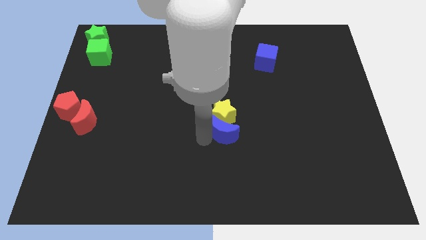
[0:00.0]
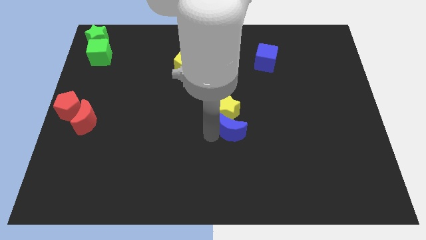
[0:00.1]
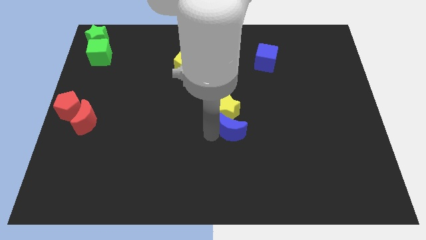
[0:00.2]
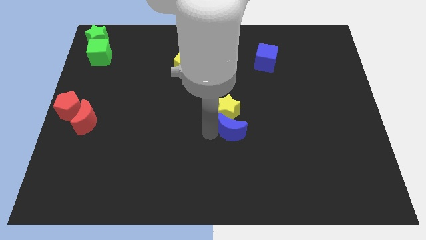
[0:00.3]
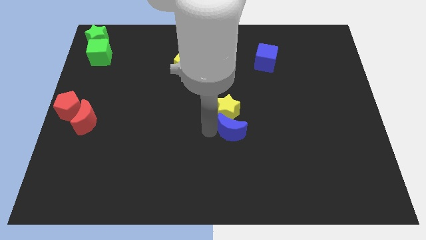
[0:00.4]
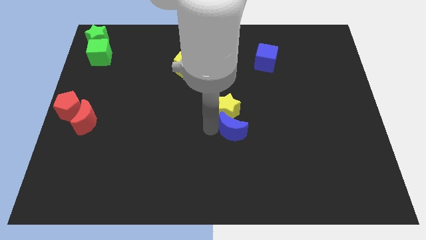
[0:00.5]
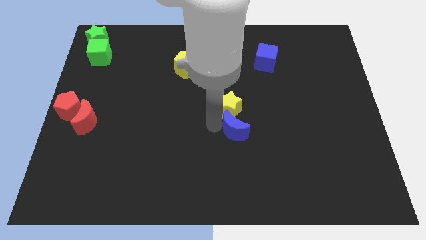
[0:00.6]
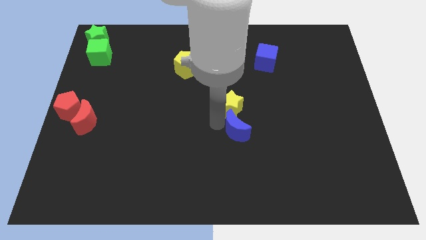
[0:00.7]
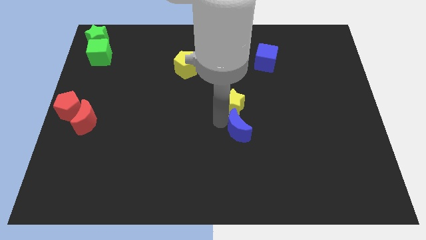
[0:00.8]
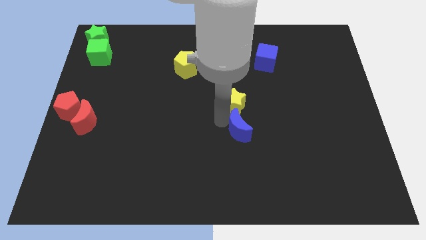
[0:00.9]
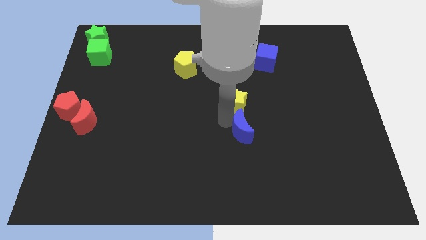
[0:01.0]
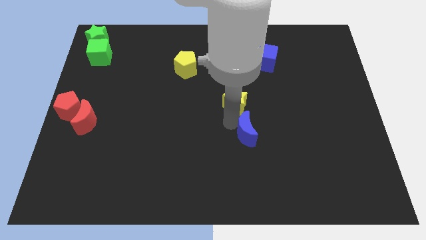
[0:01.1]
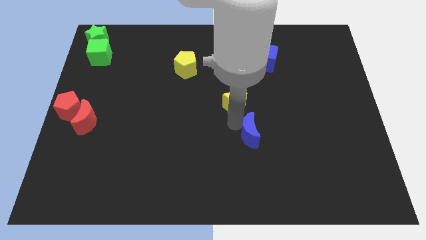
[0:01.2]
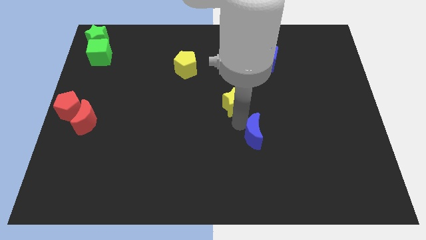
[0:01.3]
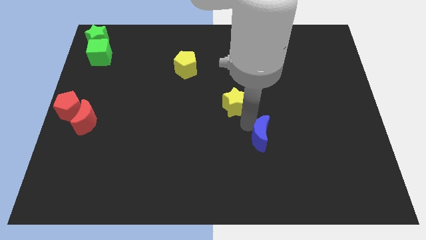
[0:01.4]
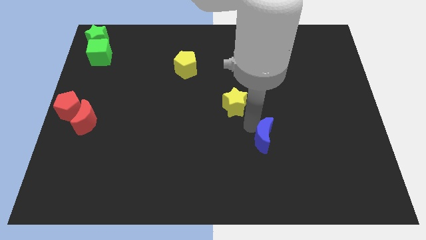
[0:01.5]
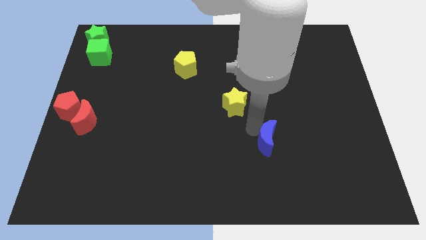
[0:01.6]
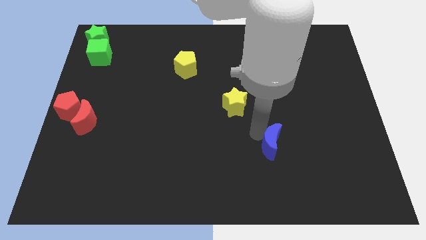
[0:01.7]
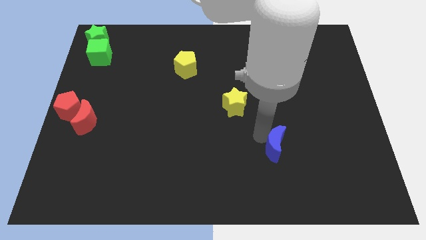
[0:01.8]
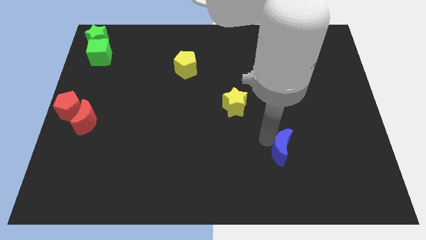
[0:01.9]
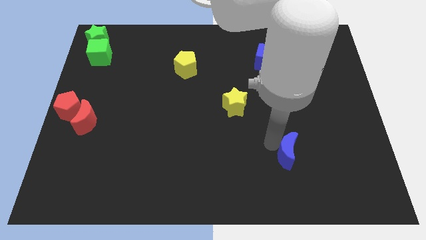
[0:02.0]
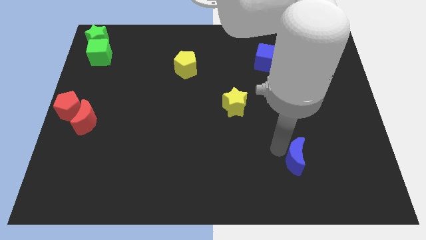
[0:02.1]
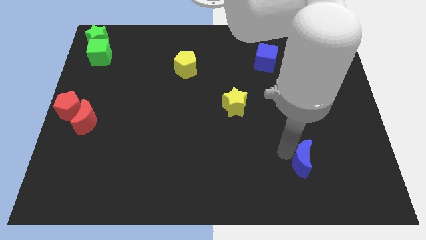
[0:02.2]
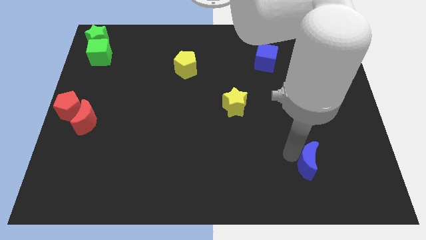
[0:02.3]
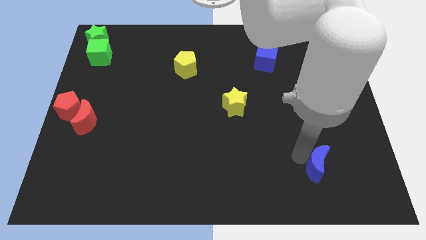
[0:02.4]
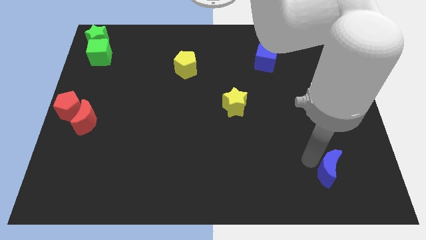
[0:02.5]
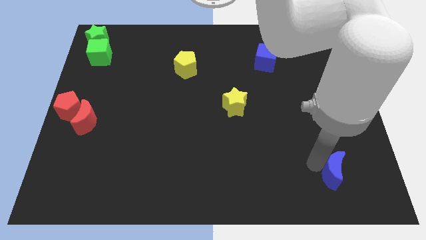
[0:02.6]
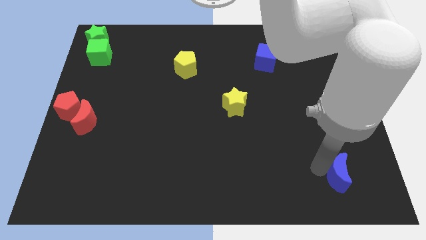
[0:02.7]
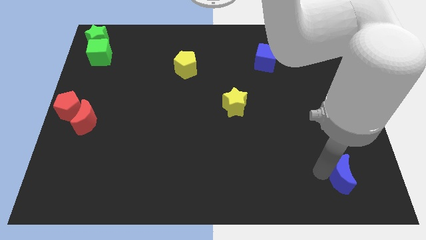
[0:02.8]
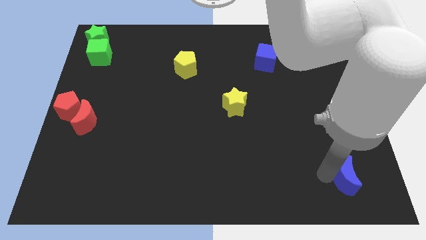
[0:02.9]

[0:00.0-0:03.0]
separate the yellow star and the blue crescent

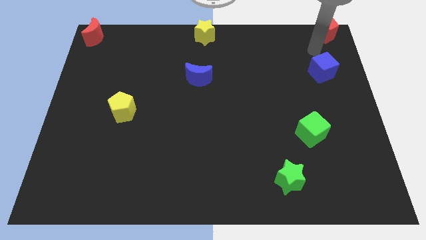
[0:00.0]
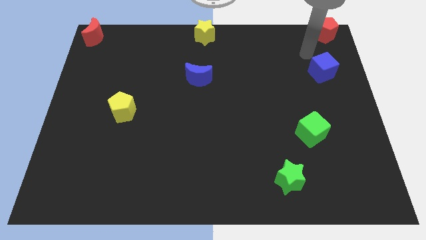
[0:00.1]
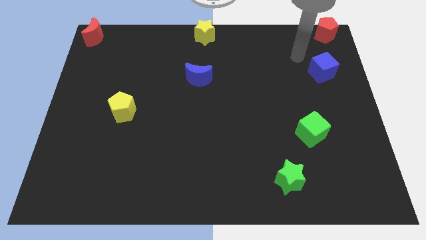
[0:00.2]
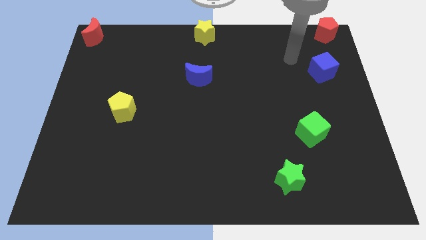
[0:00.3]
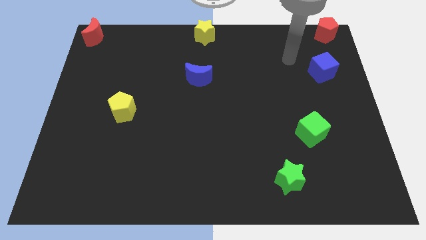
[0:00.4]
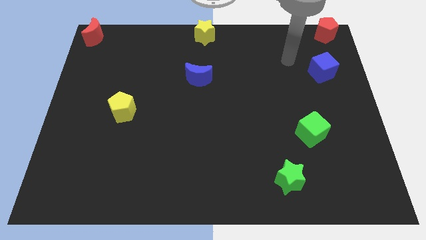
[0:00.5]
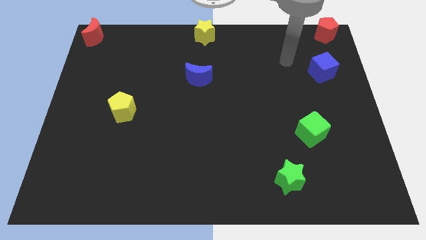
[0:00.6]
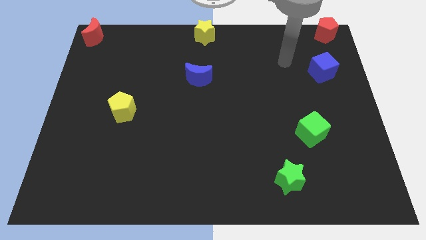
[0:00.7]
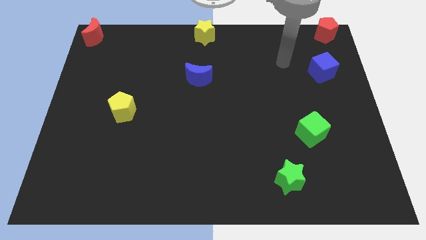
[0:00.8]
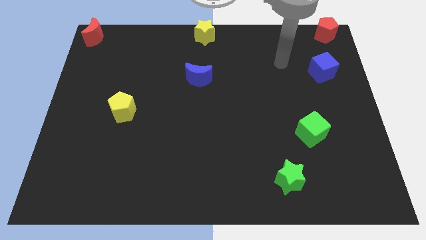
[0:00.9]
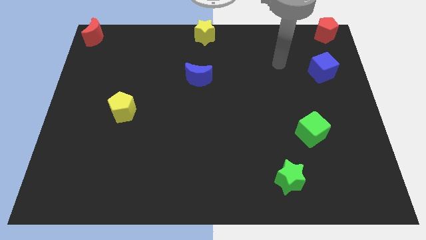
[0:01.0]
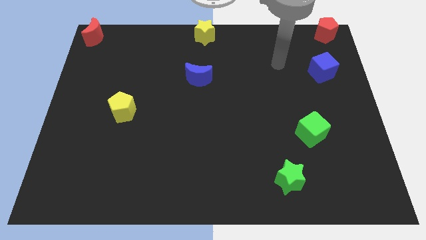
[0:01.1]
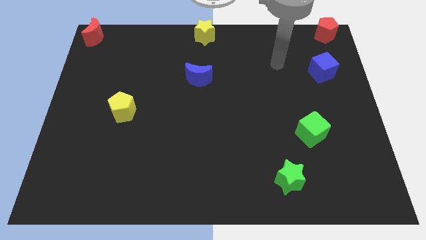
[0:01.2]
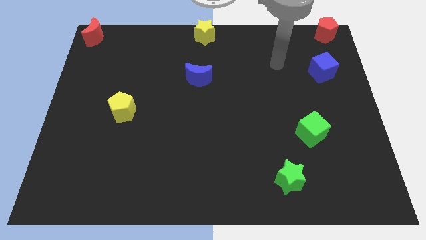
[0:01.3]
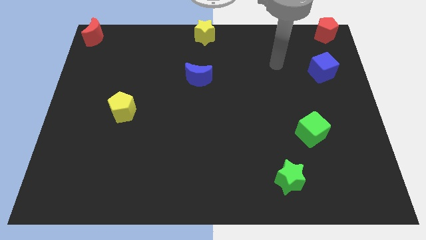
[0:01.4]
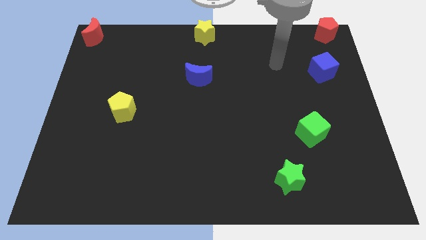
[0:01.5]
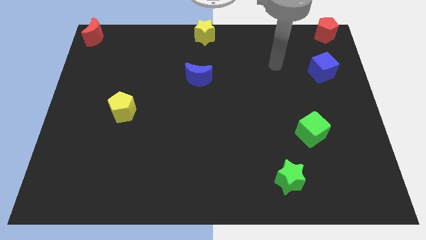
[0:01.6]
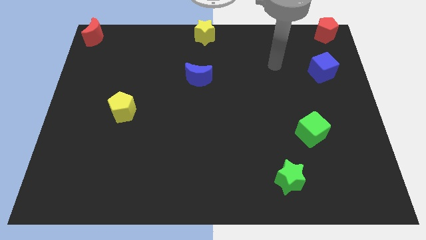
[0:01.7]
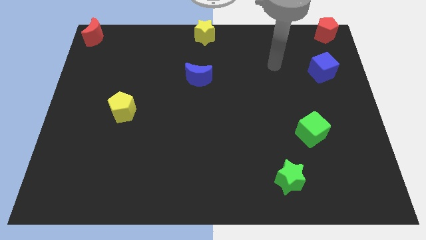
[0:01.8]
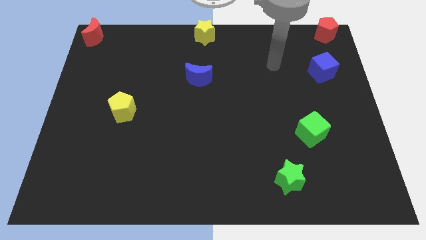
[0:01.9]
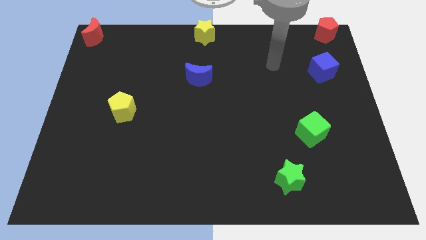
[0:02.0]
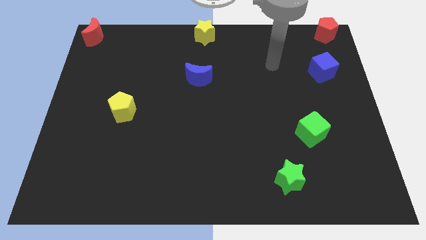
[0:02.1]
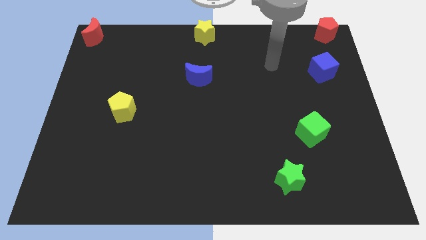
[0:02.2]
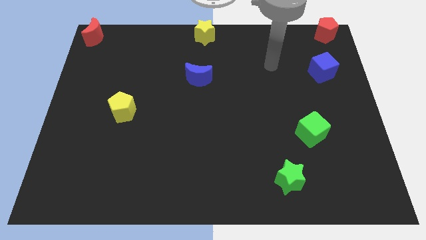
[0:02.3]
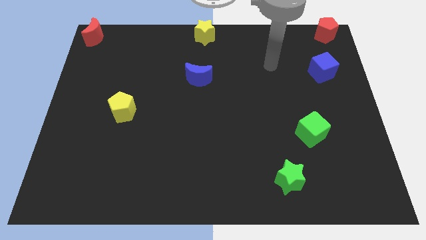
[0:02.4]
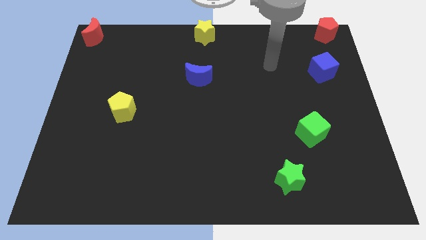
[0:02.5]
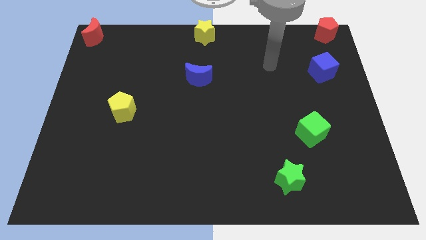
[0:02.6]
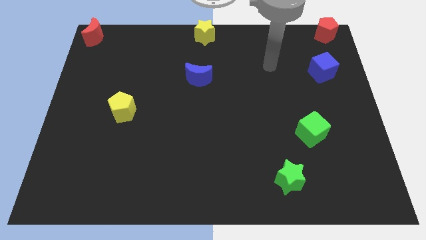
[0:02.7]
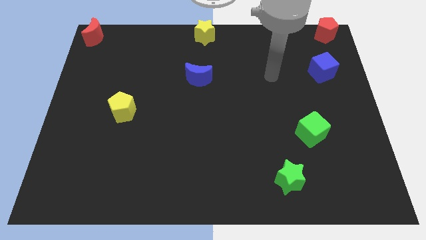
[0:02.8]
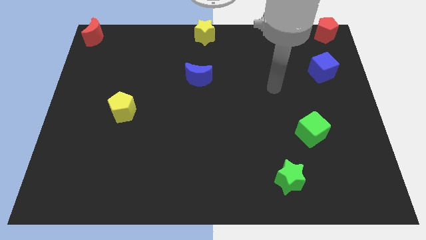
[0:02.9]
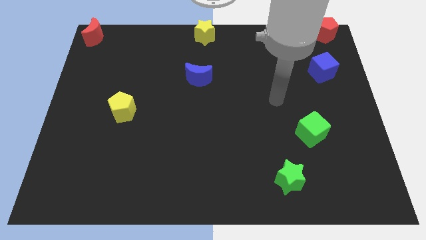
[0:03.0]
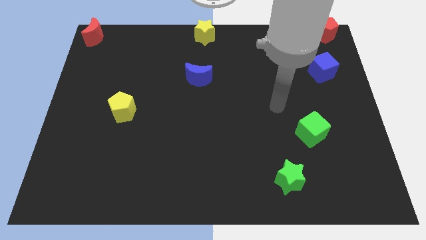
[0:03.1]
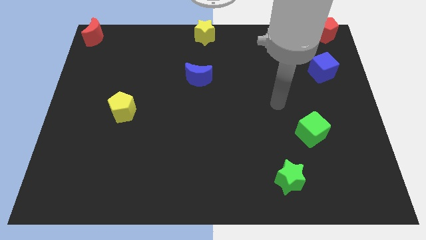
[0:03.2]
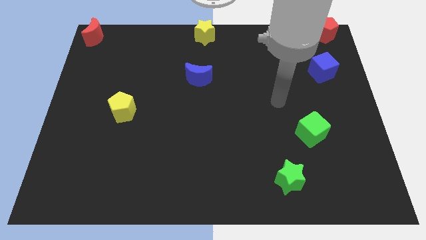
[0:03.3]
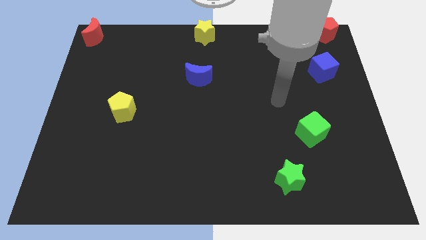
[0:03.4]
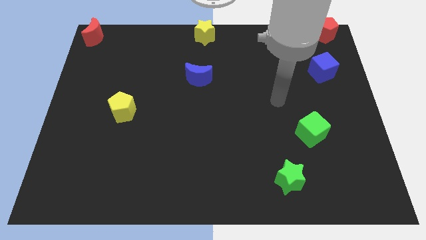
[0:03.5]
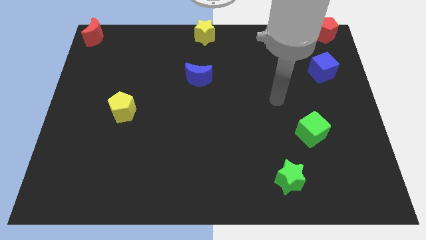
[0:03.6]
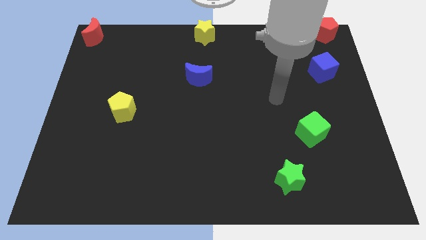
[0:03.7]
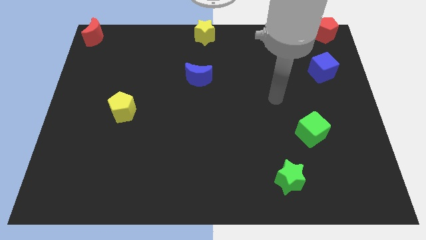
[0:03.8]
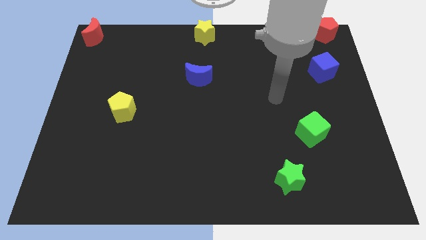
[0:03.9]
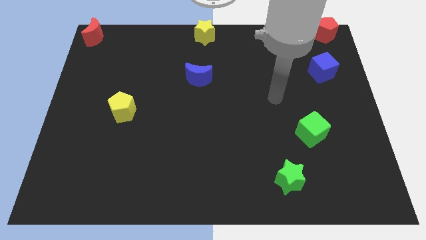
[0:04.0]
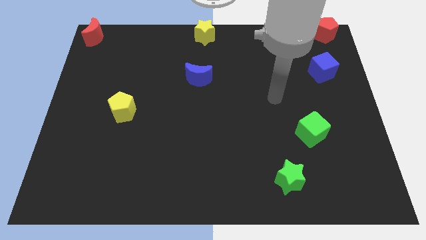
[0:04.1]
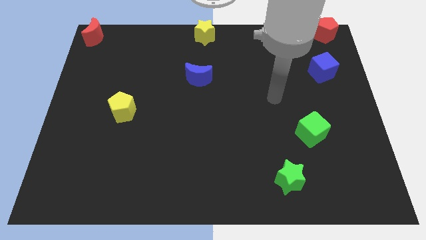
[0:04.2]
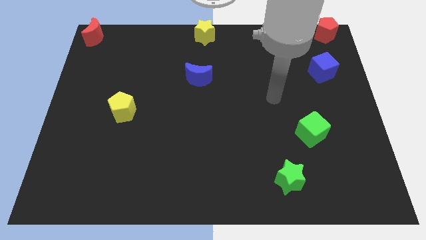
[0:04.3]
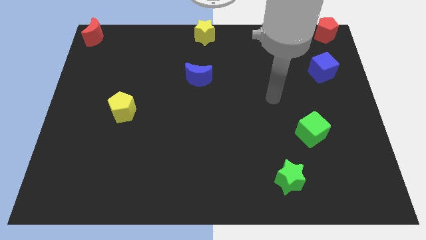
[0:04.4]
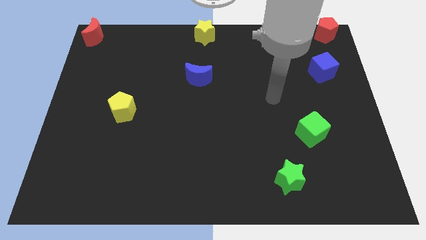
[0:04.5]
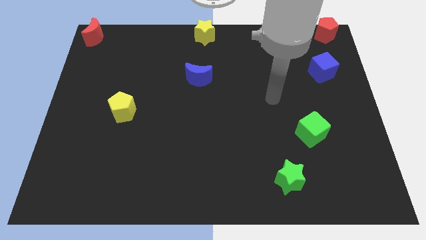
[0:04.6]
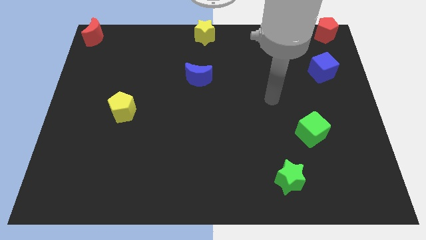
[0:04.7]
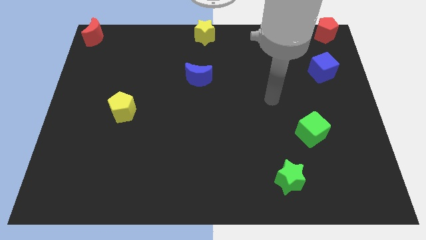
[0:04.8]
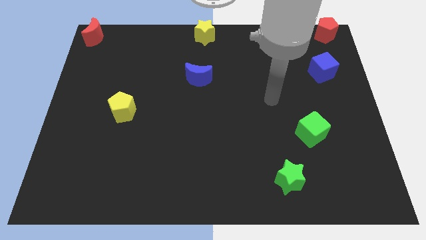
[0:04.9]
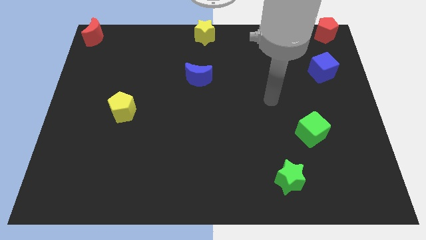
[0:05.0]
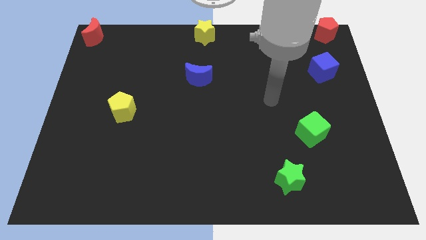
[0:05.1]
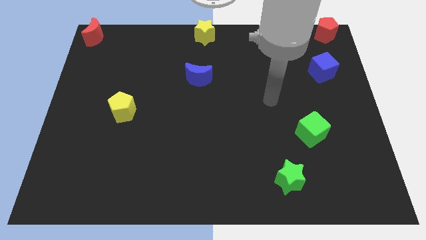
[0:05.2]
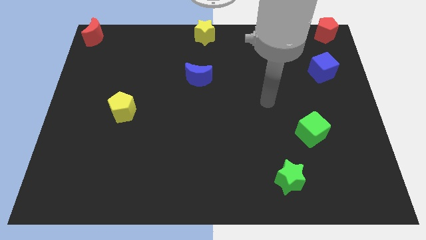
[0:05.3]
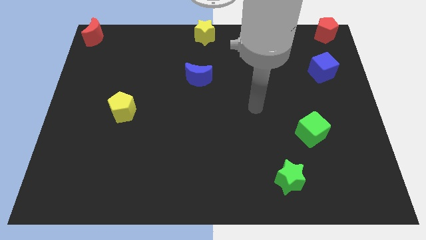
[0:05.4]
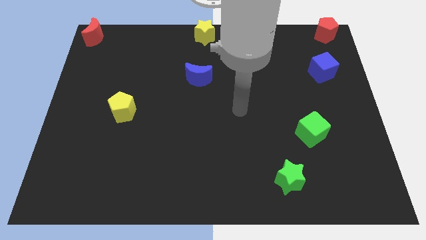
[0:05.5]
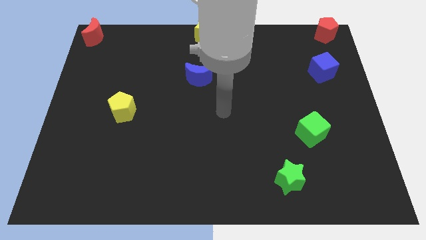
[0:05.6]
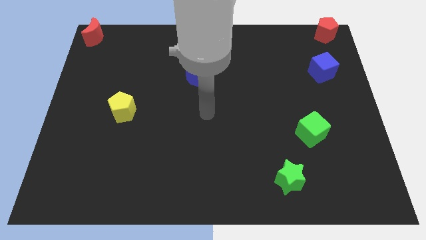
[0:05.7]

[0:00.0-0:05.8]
point your arm at the center of the board

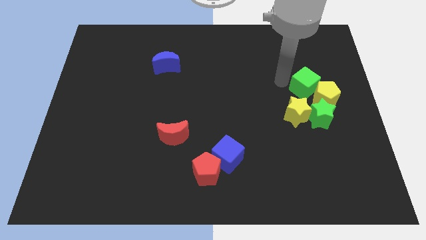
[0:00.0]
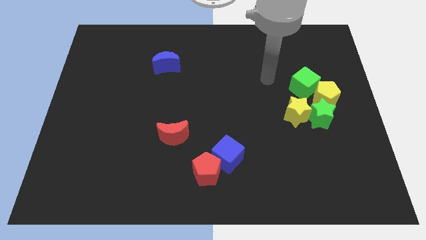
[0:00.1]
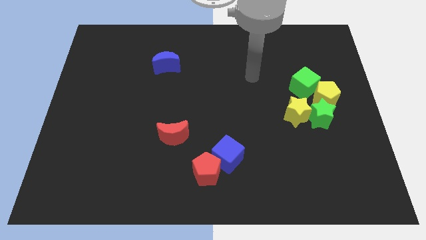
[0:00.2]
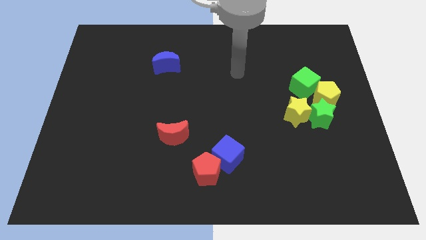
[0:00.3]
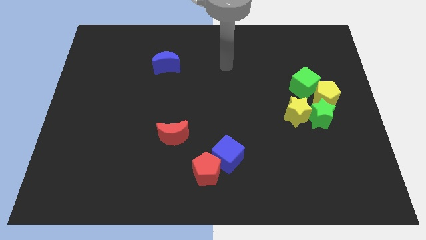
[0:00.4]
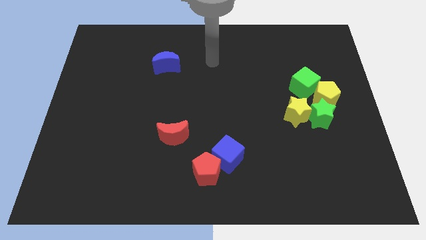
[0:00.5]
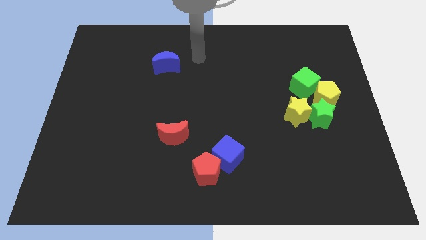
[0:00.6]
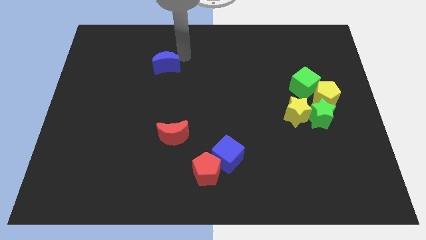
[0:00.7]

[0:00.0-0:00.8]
move the arm towards the right of the blue crescent
